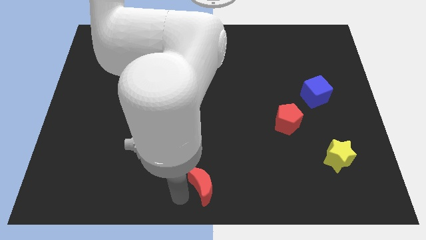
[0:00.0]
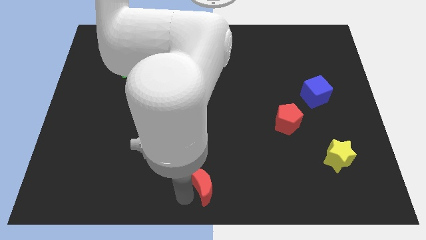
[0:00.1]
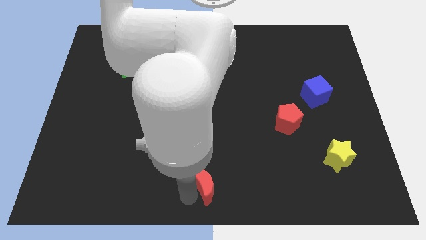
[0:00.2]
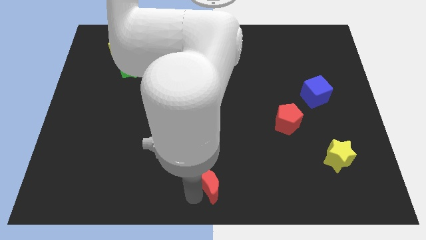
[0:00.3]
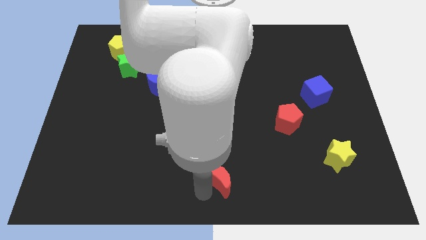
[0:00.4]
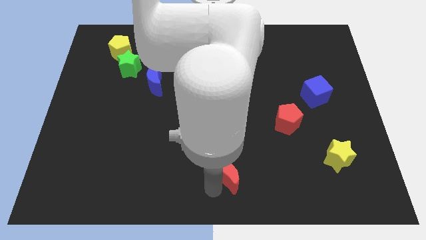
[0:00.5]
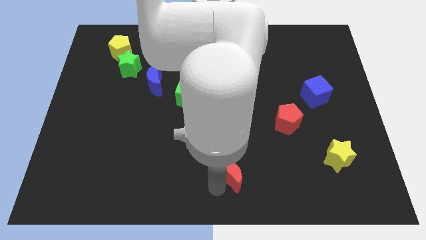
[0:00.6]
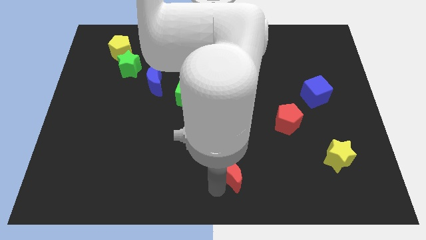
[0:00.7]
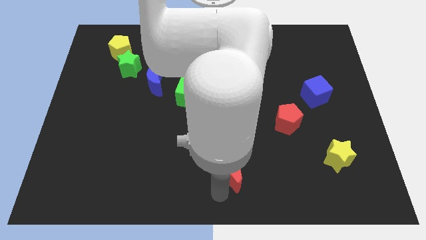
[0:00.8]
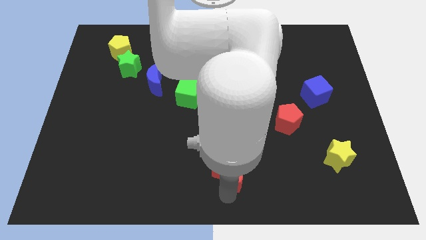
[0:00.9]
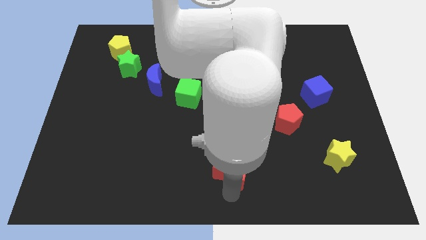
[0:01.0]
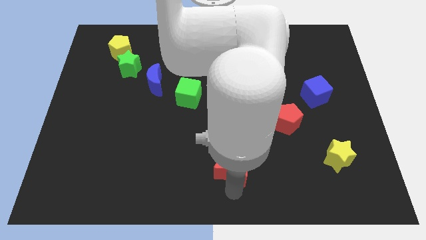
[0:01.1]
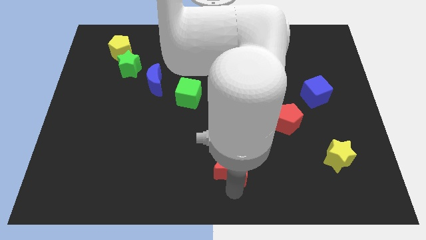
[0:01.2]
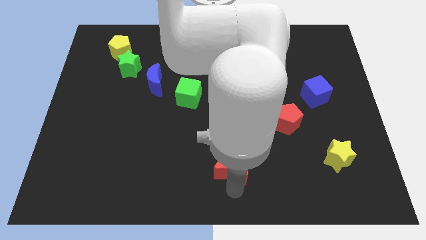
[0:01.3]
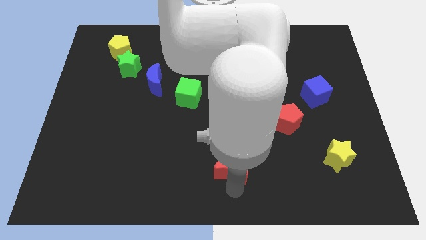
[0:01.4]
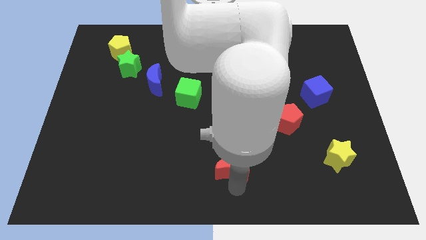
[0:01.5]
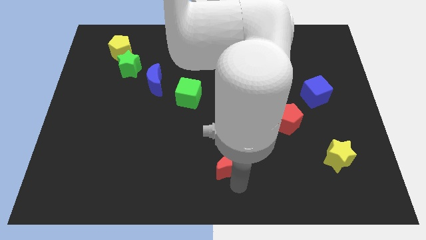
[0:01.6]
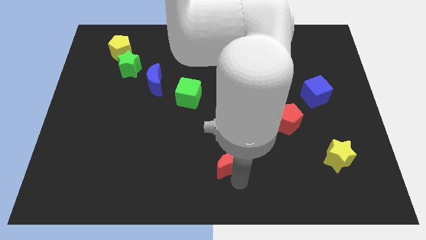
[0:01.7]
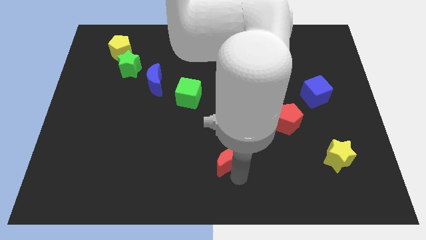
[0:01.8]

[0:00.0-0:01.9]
drag the red moon diagonally on the bottom left of the red pentagon

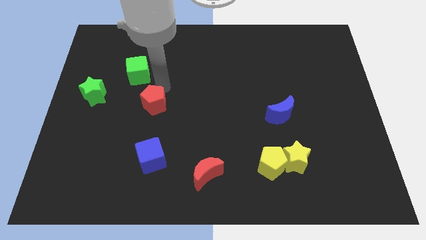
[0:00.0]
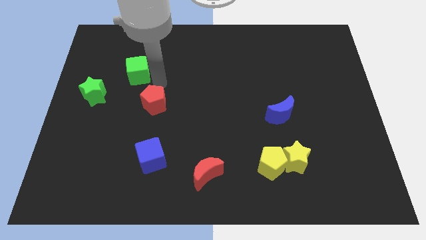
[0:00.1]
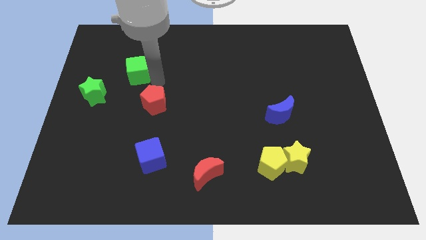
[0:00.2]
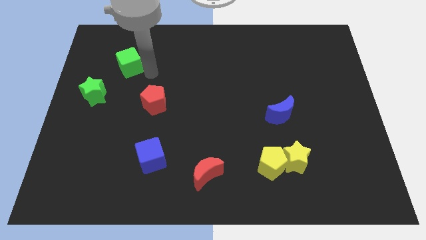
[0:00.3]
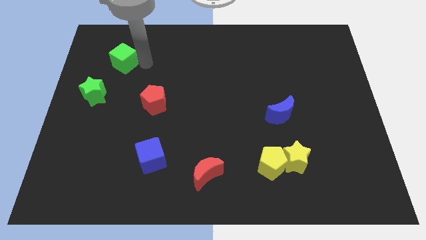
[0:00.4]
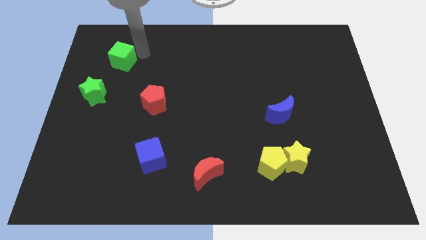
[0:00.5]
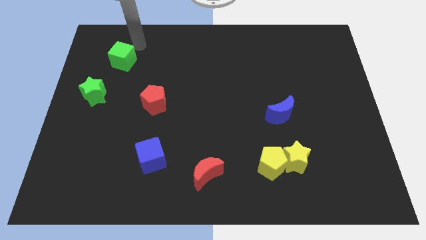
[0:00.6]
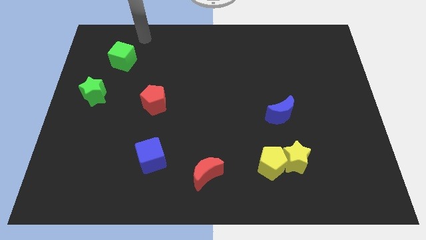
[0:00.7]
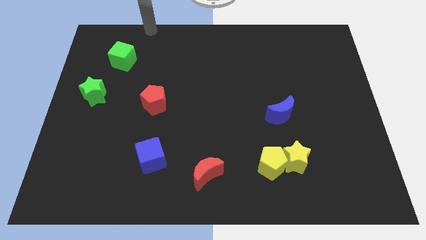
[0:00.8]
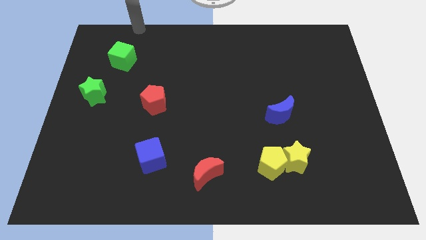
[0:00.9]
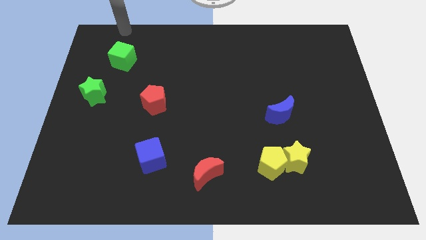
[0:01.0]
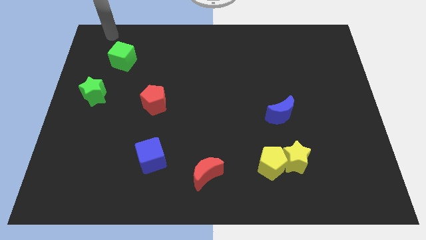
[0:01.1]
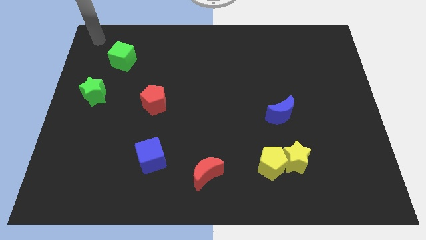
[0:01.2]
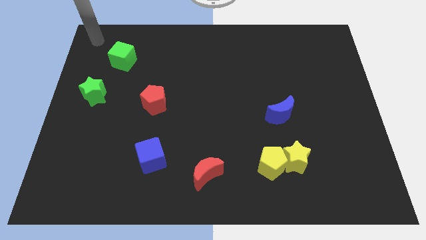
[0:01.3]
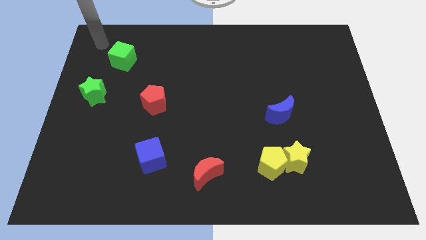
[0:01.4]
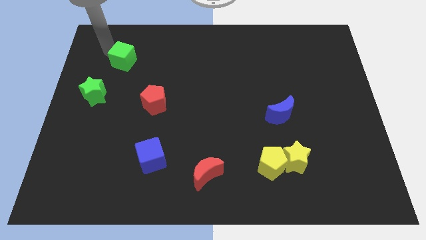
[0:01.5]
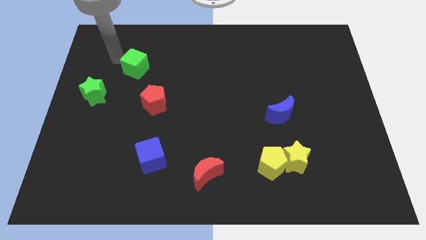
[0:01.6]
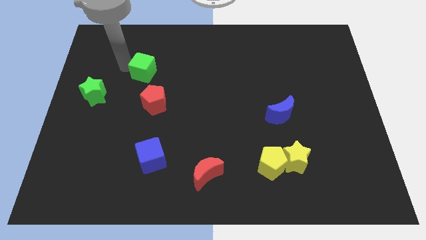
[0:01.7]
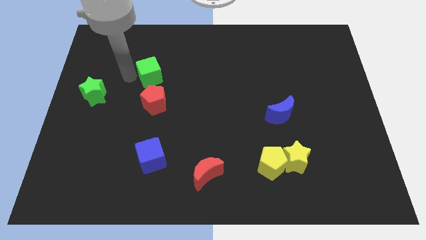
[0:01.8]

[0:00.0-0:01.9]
put the green cube above the red pentagon

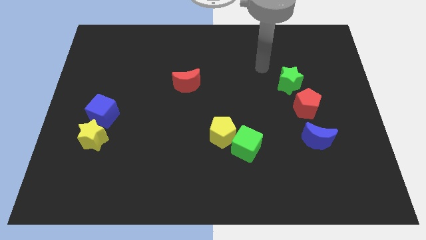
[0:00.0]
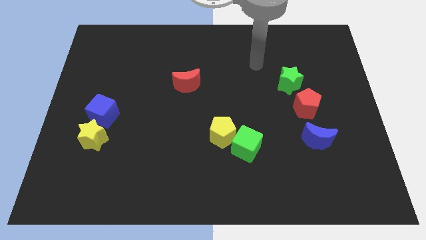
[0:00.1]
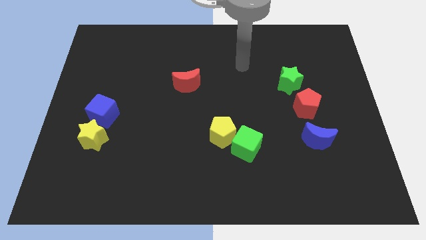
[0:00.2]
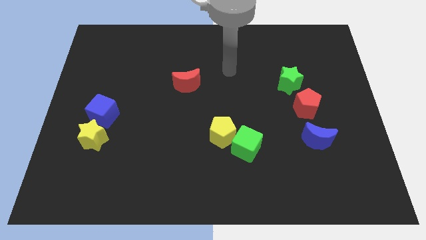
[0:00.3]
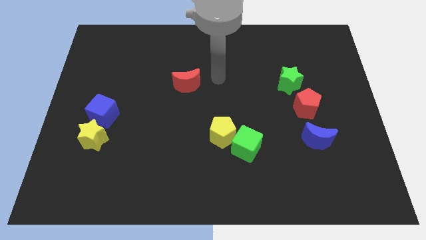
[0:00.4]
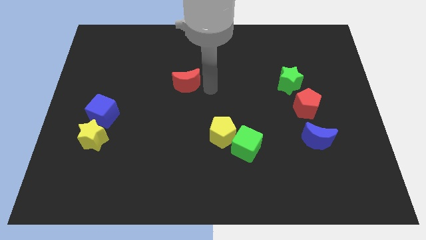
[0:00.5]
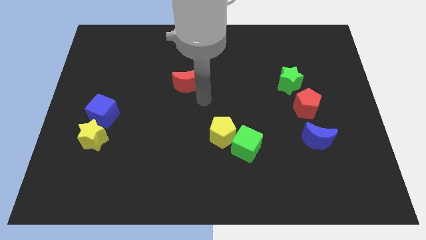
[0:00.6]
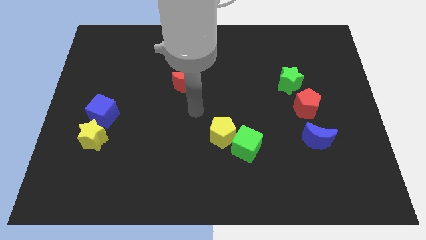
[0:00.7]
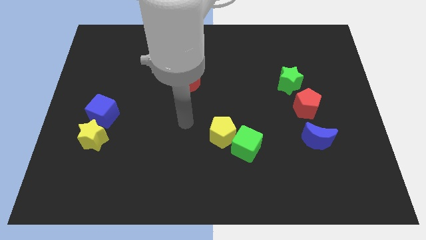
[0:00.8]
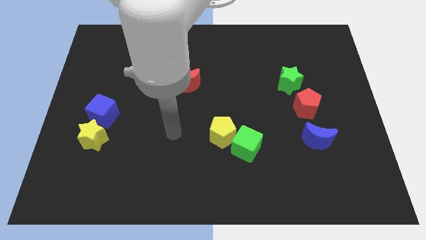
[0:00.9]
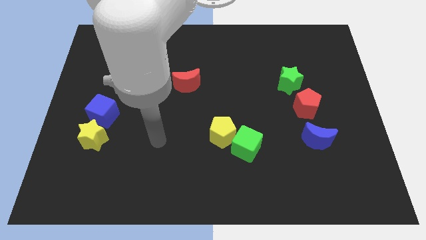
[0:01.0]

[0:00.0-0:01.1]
point the arm in between the yellow pentagon and the yellow star

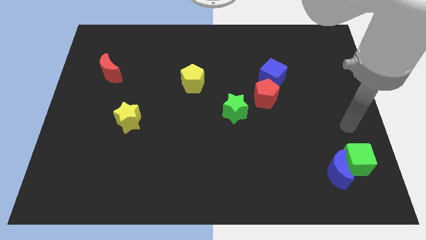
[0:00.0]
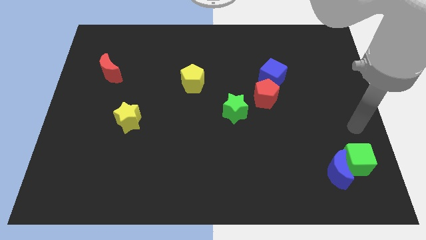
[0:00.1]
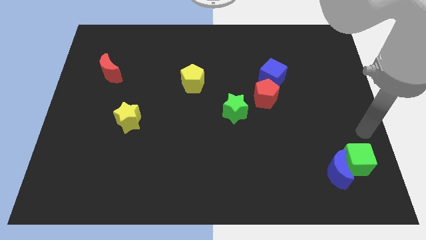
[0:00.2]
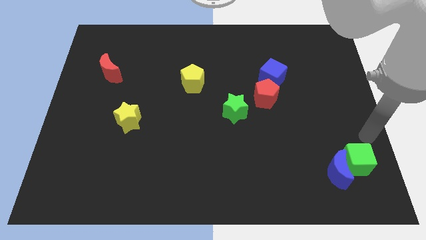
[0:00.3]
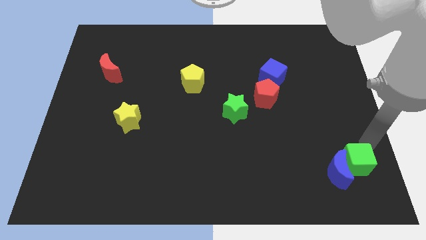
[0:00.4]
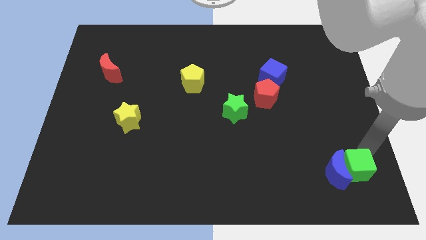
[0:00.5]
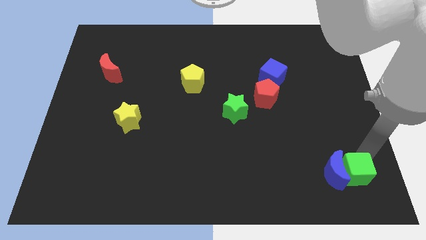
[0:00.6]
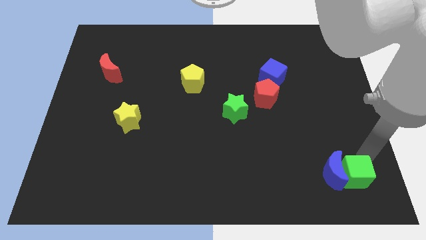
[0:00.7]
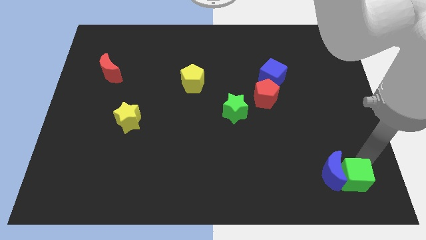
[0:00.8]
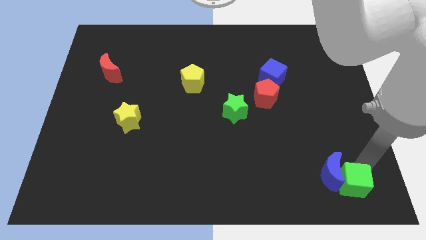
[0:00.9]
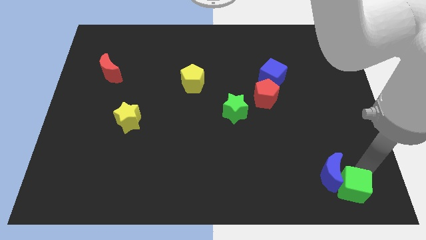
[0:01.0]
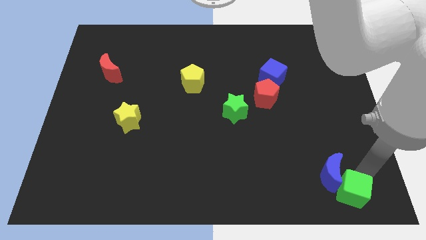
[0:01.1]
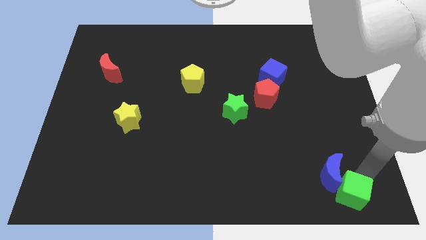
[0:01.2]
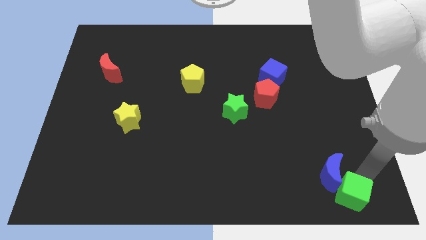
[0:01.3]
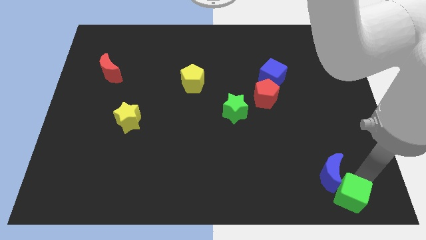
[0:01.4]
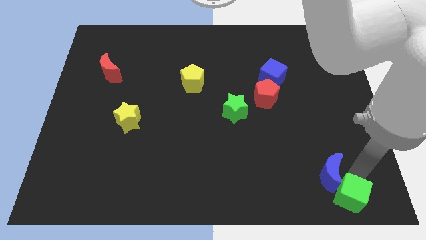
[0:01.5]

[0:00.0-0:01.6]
push green cube towards the bottom of the board

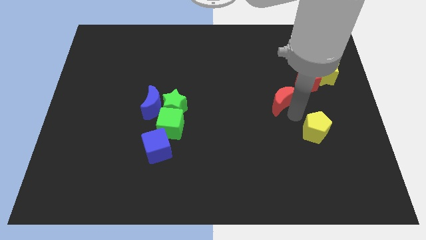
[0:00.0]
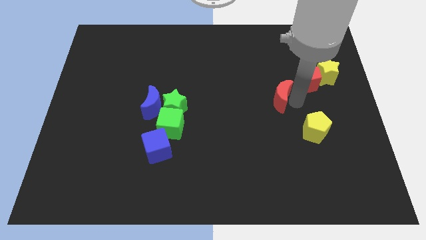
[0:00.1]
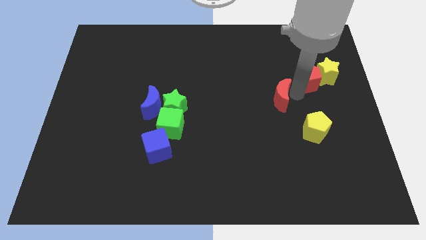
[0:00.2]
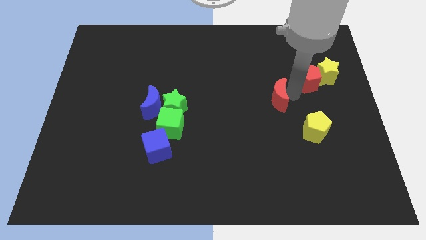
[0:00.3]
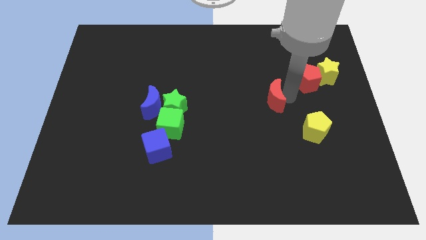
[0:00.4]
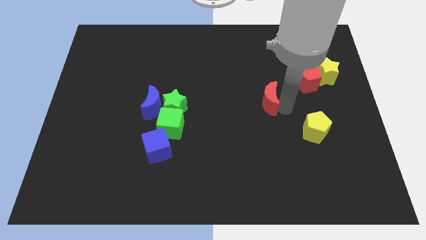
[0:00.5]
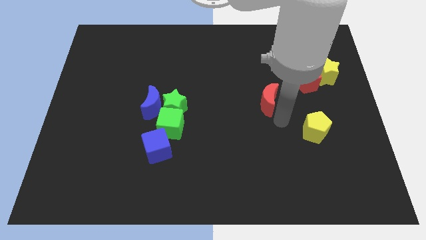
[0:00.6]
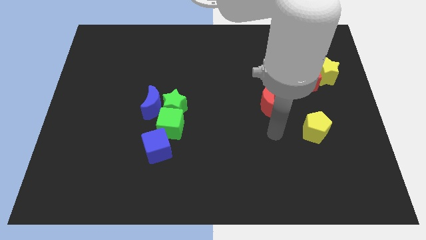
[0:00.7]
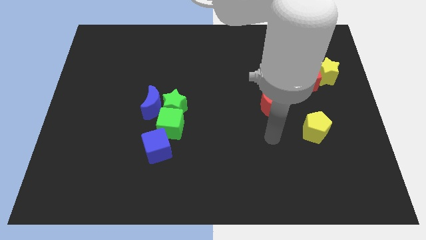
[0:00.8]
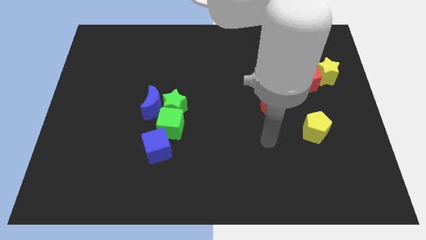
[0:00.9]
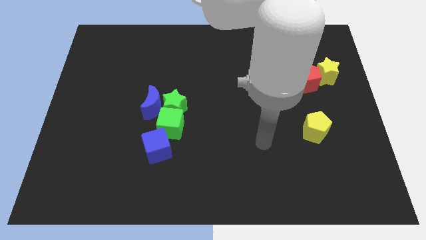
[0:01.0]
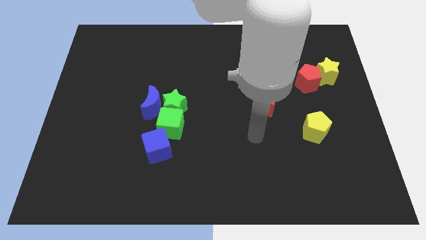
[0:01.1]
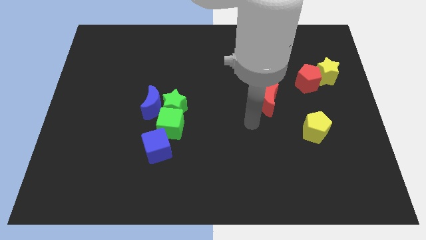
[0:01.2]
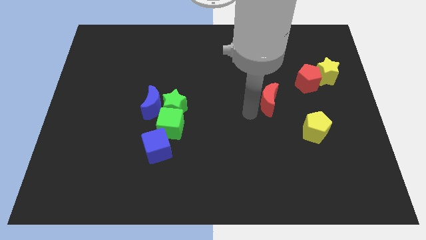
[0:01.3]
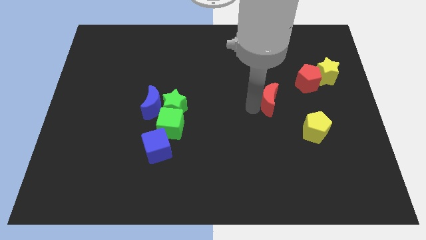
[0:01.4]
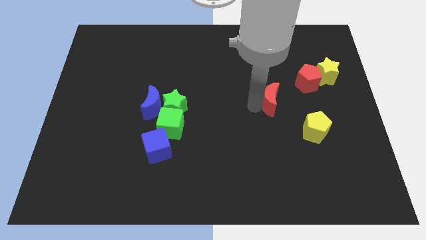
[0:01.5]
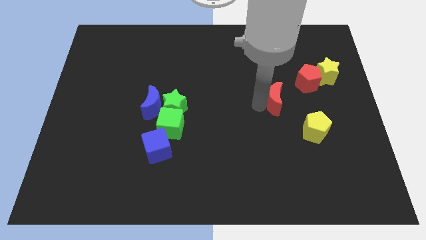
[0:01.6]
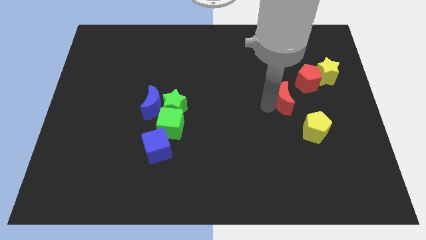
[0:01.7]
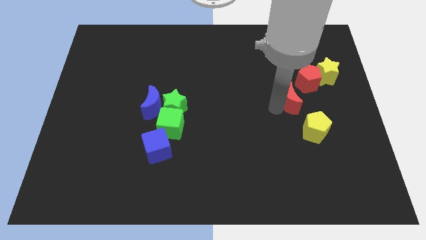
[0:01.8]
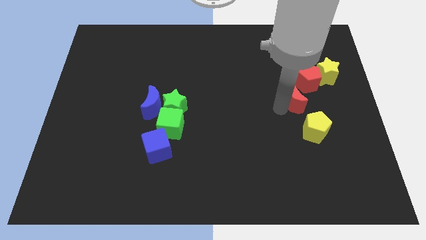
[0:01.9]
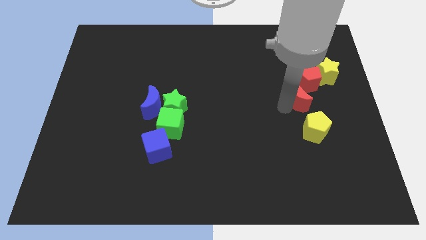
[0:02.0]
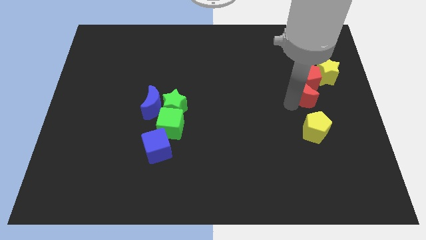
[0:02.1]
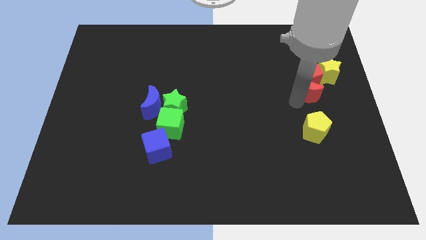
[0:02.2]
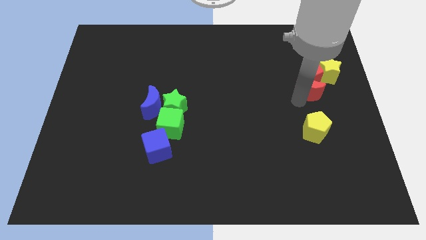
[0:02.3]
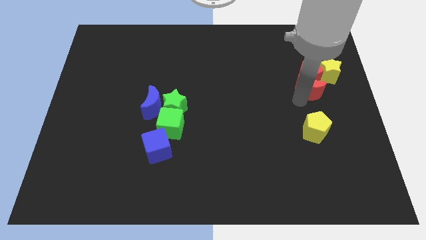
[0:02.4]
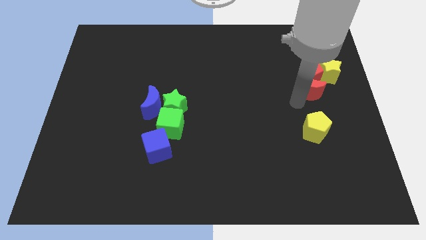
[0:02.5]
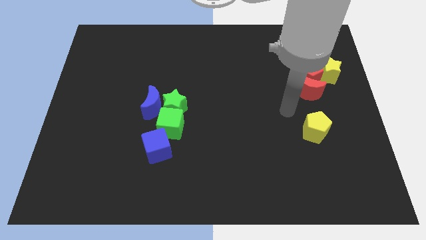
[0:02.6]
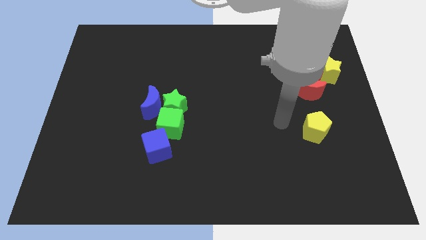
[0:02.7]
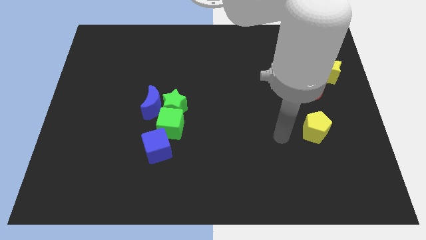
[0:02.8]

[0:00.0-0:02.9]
push the red blocks and yellow star towards the top right corner of the board
